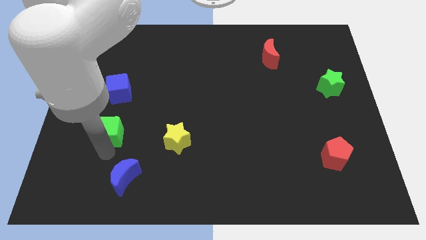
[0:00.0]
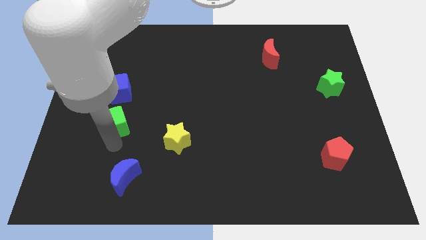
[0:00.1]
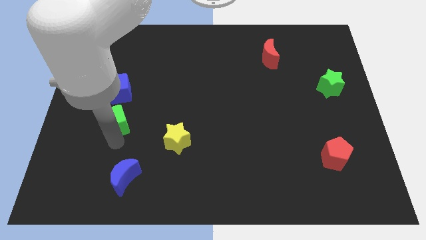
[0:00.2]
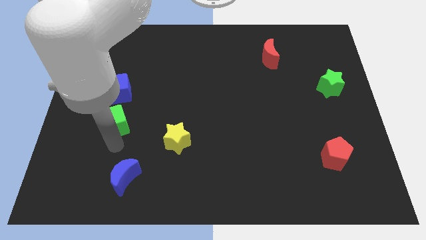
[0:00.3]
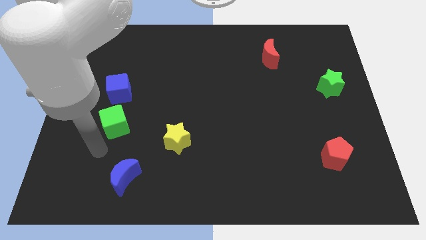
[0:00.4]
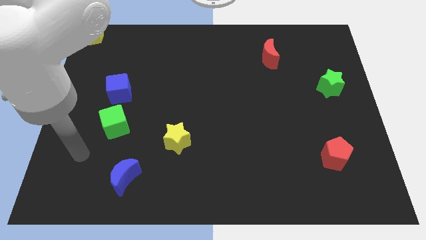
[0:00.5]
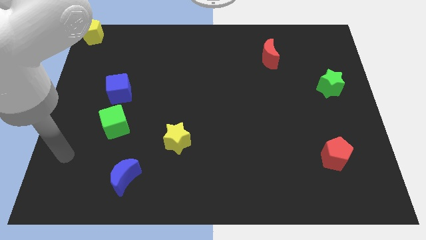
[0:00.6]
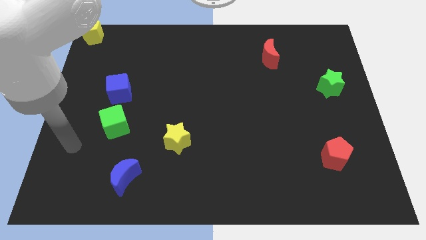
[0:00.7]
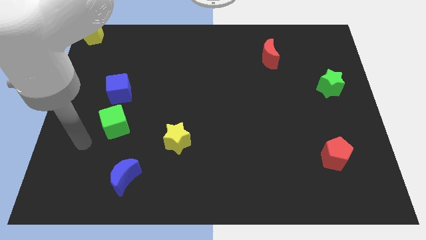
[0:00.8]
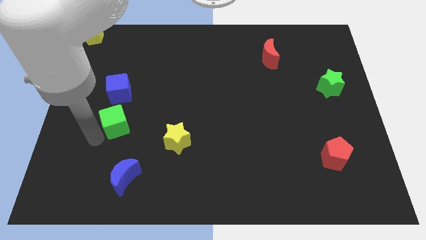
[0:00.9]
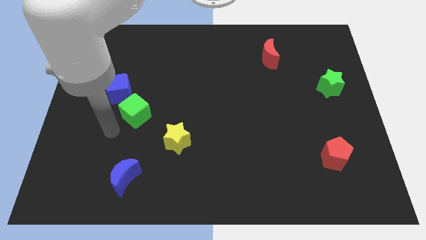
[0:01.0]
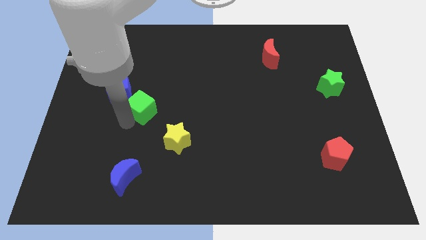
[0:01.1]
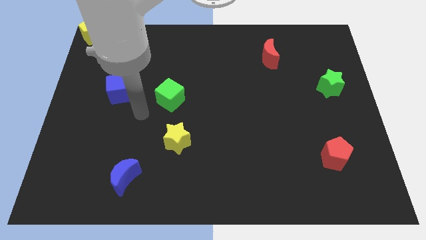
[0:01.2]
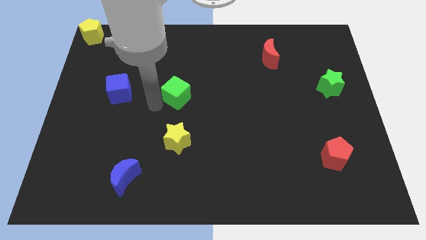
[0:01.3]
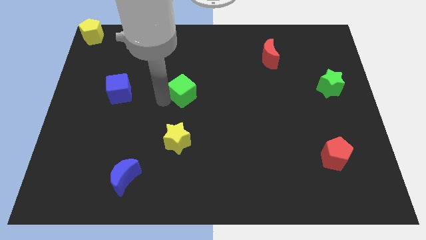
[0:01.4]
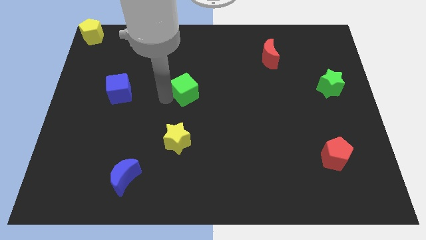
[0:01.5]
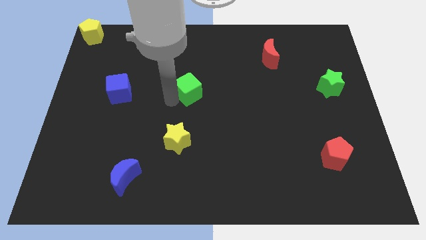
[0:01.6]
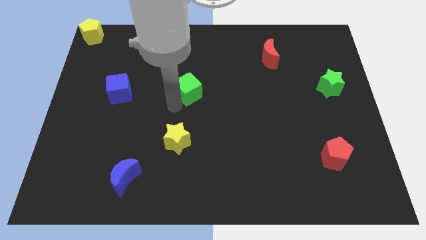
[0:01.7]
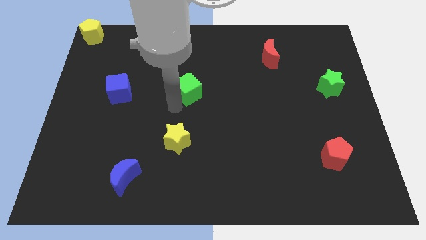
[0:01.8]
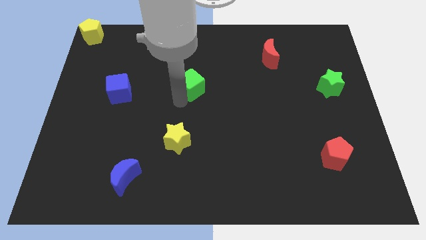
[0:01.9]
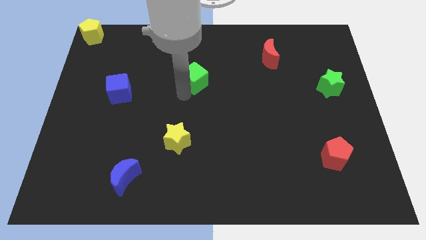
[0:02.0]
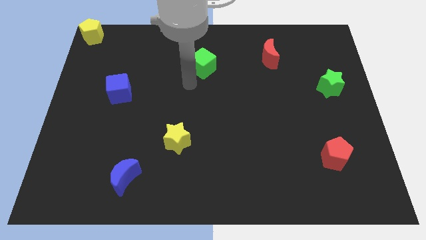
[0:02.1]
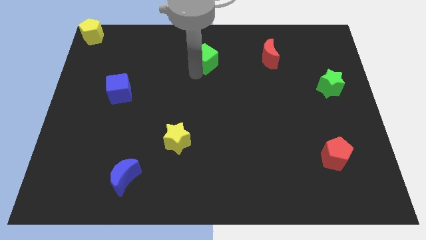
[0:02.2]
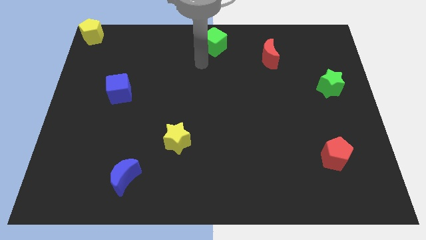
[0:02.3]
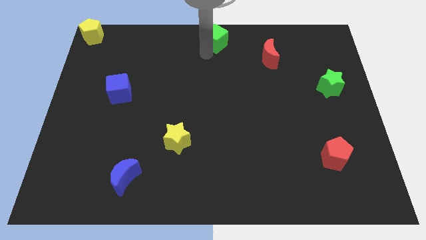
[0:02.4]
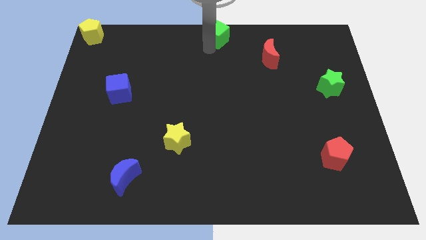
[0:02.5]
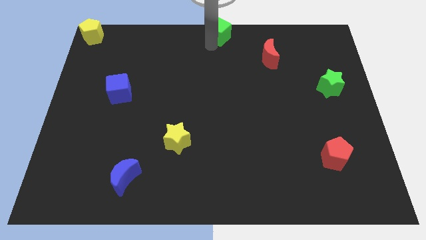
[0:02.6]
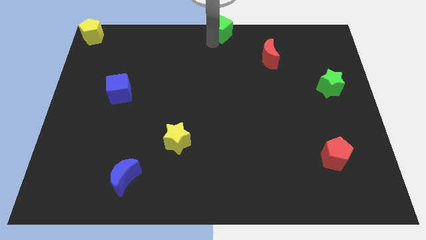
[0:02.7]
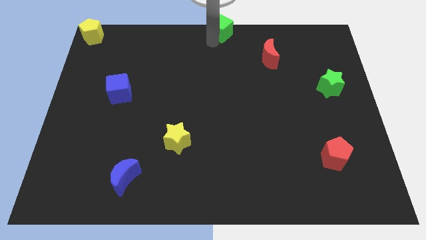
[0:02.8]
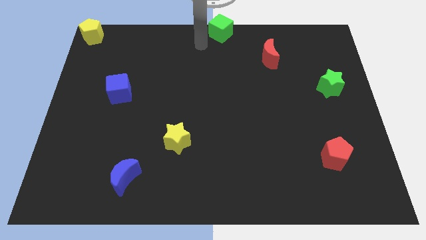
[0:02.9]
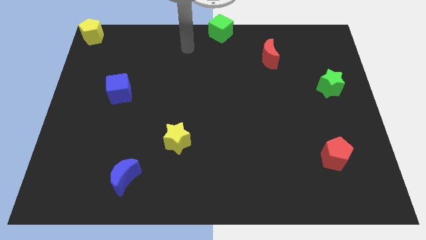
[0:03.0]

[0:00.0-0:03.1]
move the green cube at the top center of the table

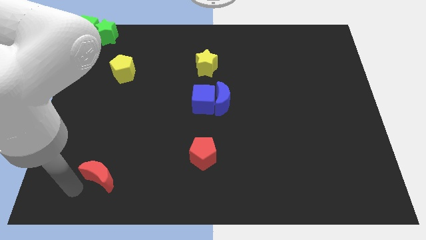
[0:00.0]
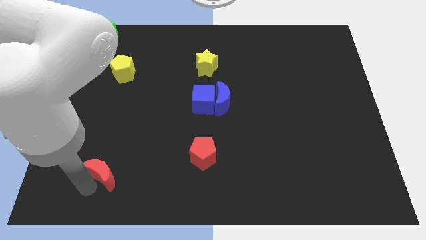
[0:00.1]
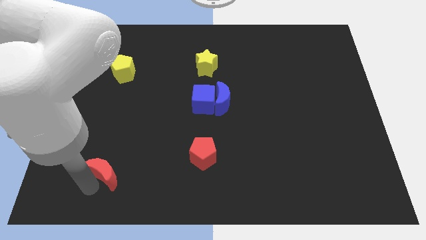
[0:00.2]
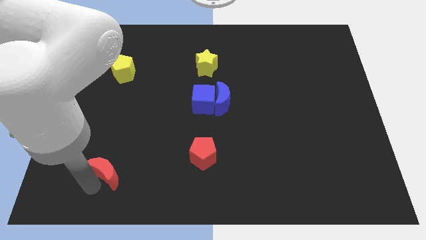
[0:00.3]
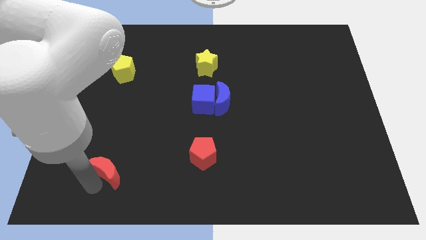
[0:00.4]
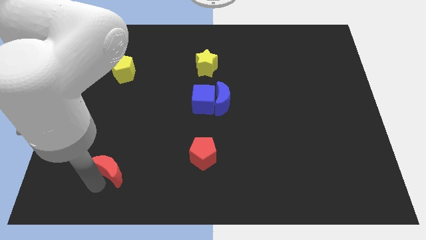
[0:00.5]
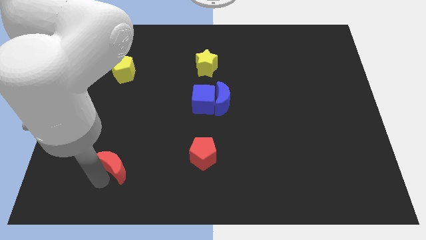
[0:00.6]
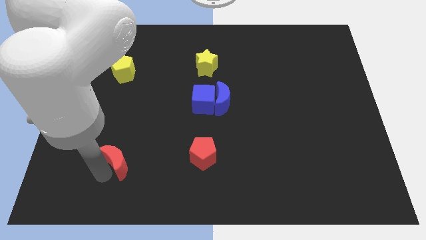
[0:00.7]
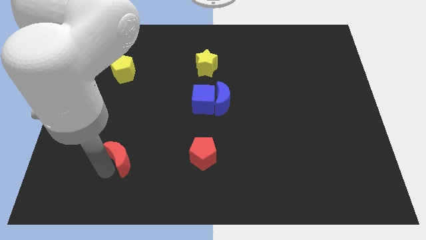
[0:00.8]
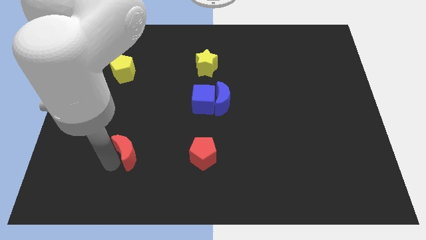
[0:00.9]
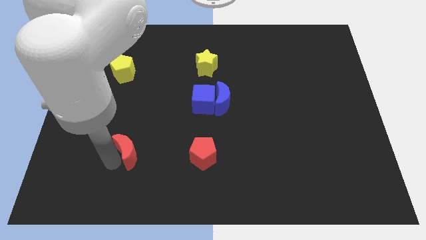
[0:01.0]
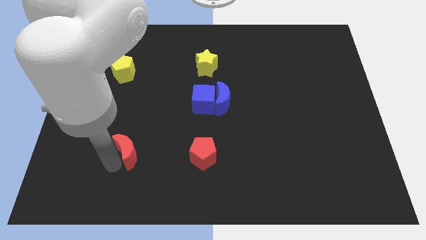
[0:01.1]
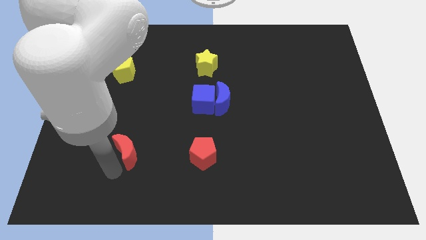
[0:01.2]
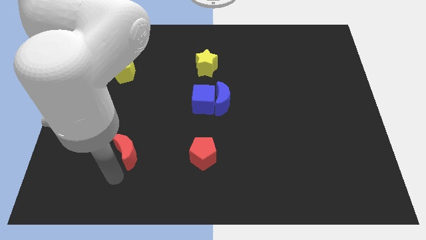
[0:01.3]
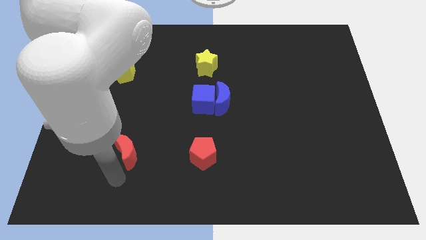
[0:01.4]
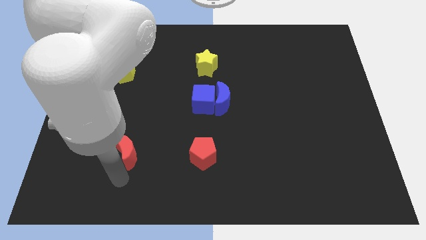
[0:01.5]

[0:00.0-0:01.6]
push the red moon adjacent to the red pentagon

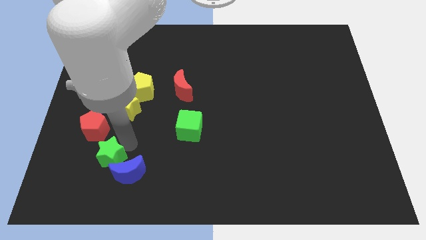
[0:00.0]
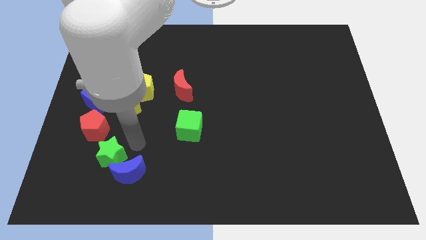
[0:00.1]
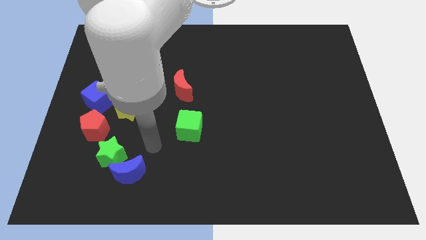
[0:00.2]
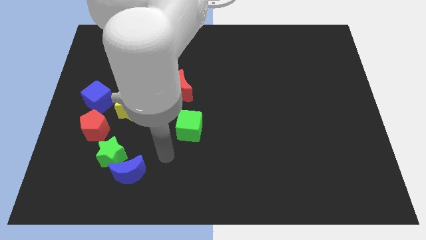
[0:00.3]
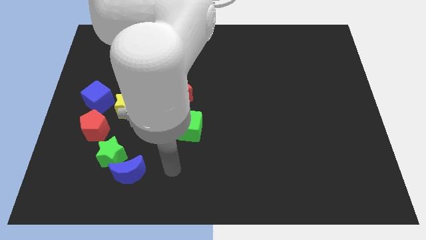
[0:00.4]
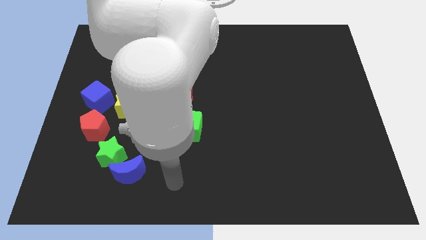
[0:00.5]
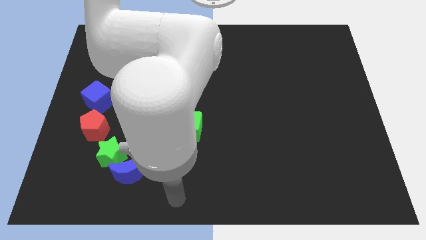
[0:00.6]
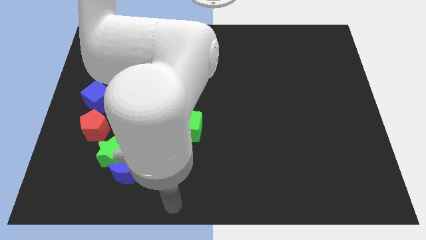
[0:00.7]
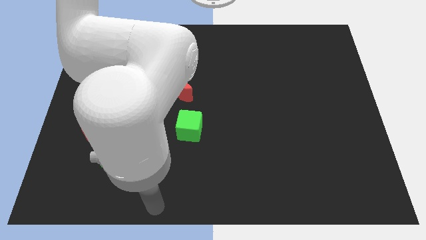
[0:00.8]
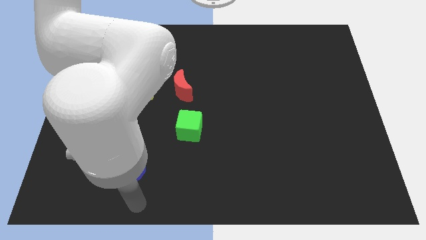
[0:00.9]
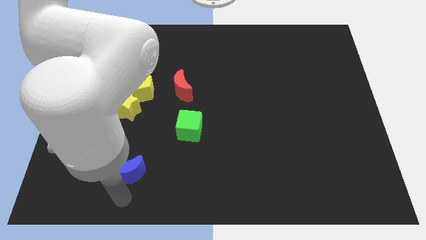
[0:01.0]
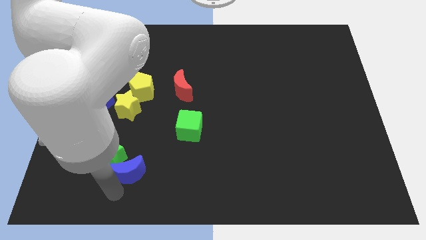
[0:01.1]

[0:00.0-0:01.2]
move your arm to the bottom of blue moon

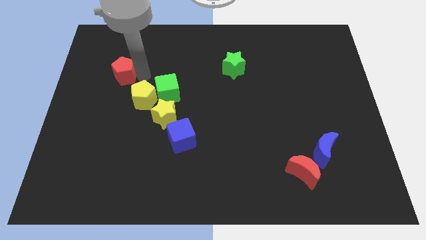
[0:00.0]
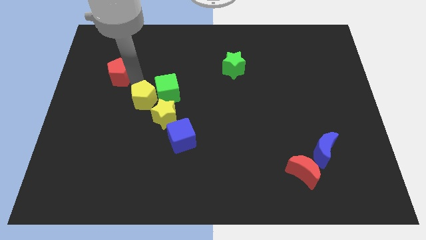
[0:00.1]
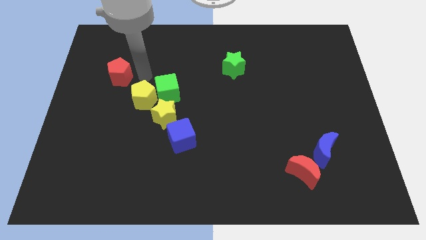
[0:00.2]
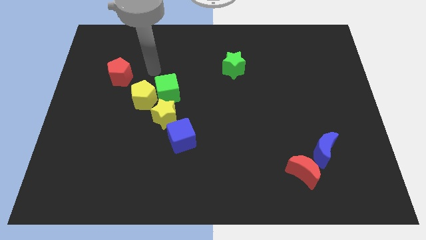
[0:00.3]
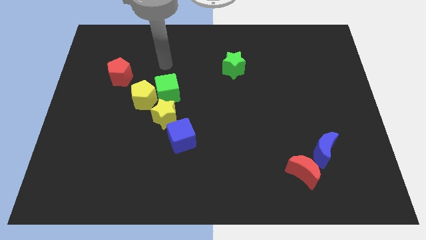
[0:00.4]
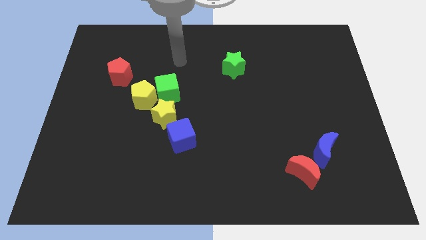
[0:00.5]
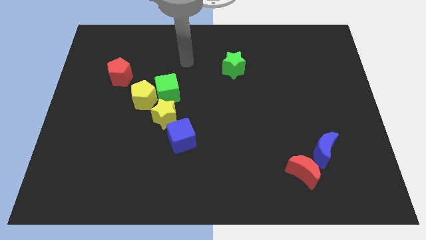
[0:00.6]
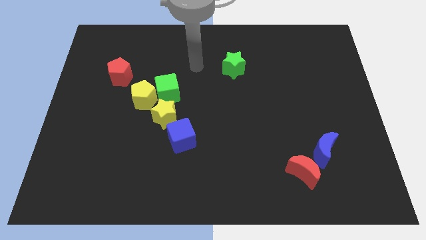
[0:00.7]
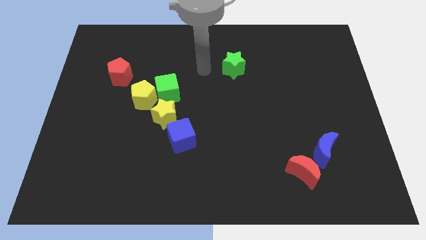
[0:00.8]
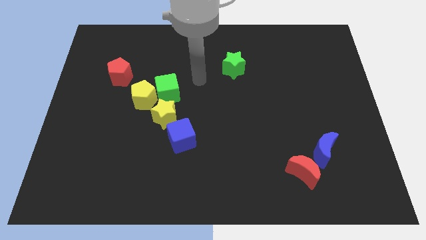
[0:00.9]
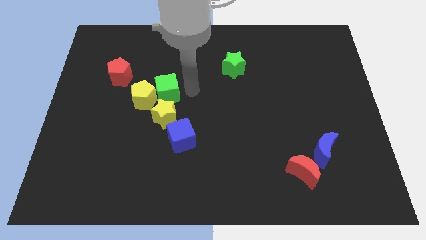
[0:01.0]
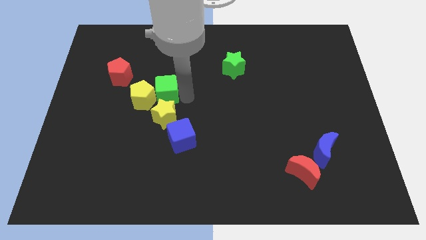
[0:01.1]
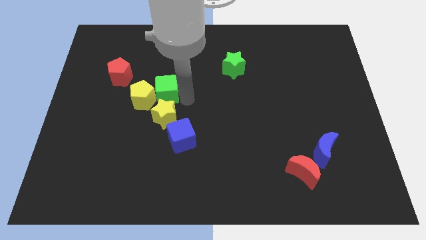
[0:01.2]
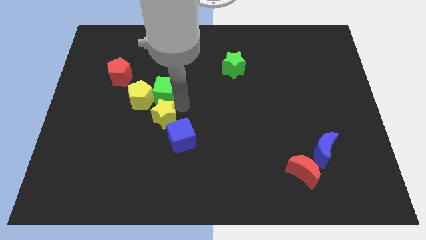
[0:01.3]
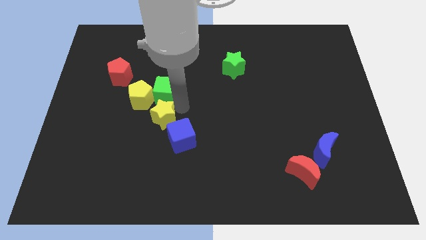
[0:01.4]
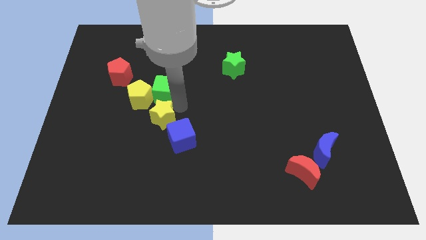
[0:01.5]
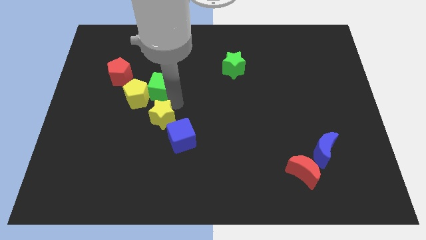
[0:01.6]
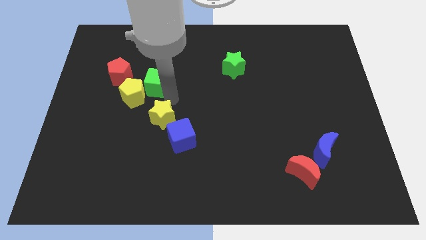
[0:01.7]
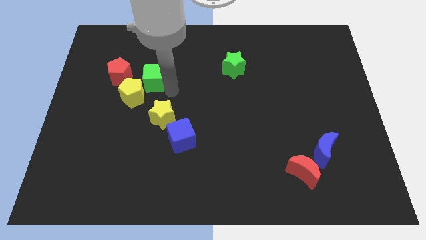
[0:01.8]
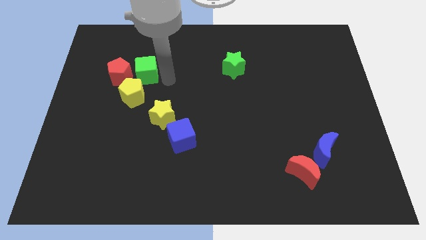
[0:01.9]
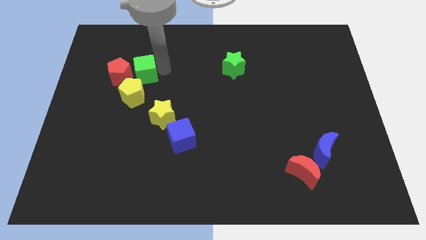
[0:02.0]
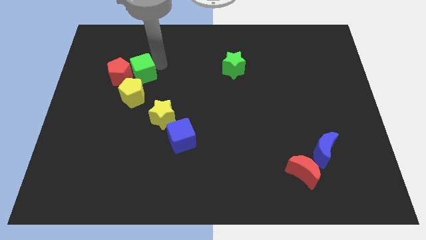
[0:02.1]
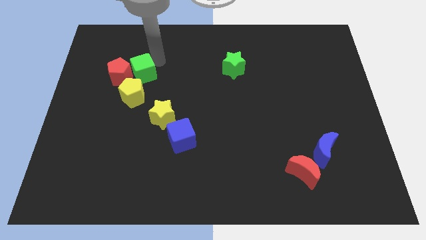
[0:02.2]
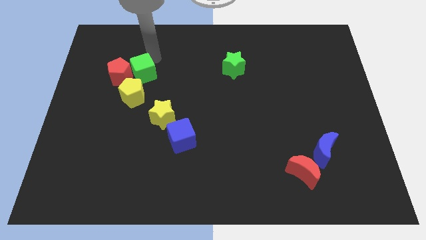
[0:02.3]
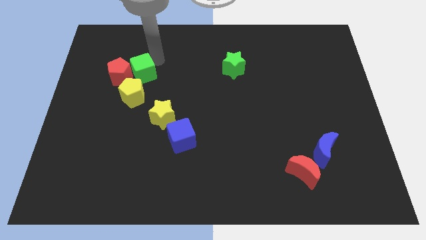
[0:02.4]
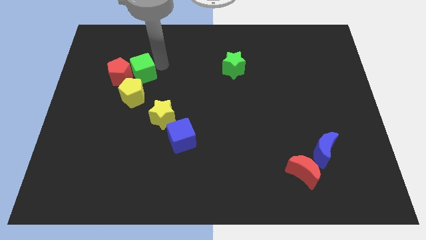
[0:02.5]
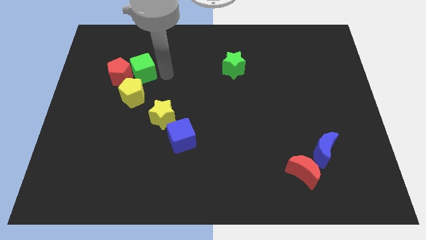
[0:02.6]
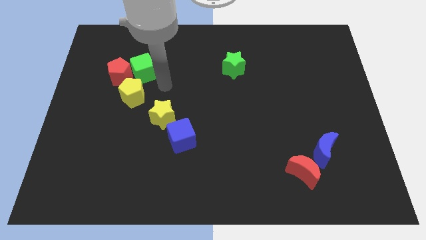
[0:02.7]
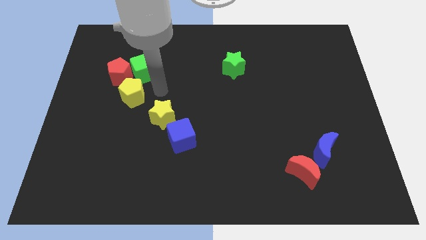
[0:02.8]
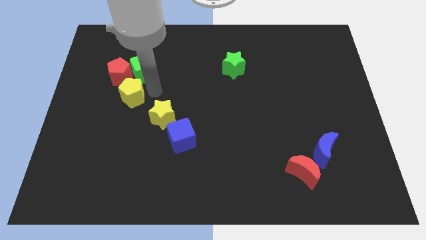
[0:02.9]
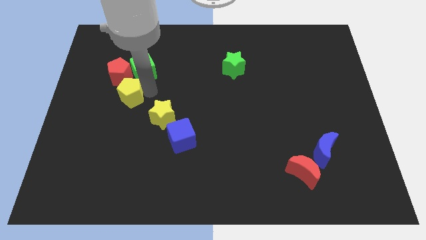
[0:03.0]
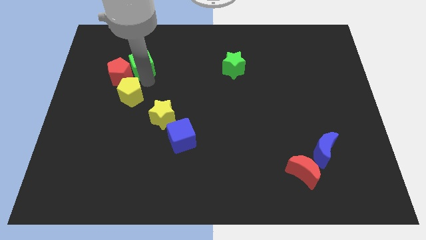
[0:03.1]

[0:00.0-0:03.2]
place the green cube right to the red pentagon
